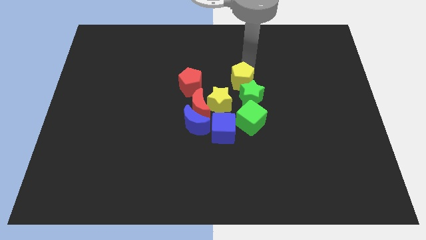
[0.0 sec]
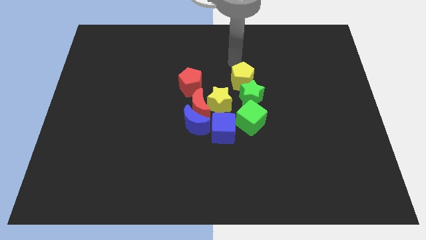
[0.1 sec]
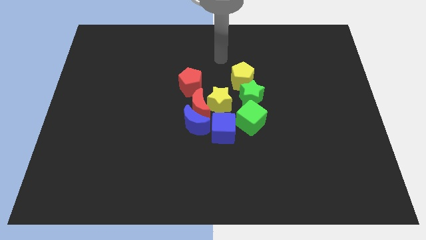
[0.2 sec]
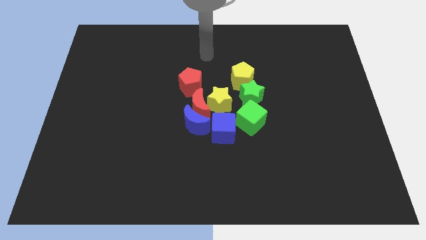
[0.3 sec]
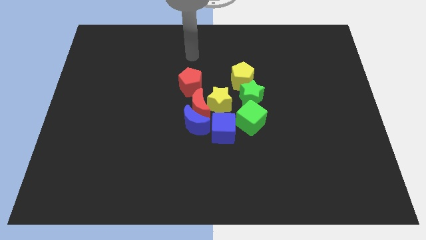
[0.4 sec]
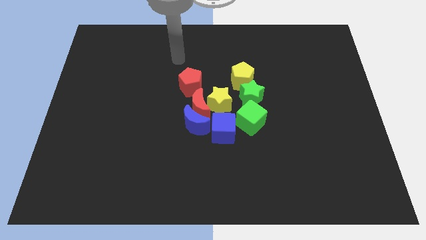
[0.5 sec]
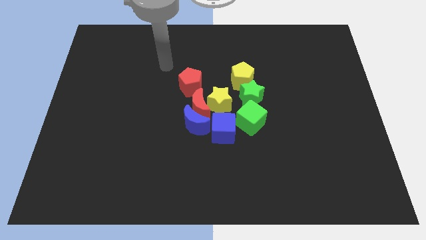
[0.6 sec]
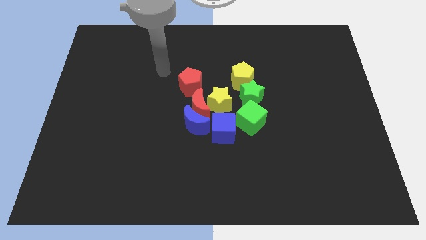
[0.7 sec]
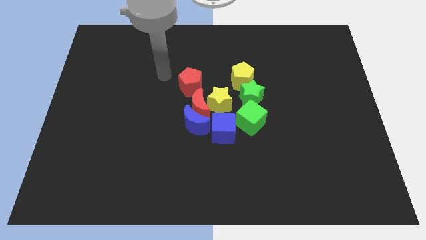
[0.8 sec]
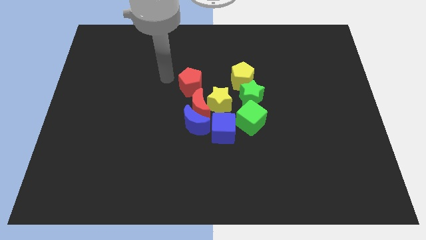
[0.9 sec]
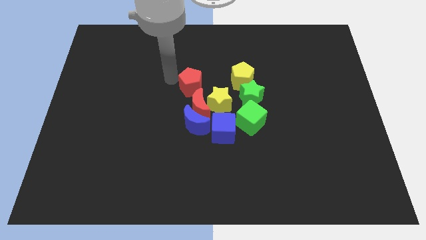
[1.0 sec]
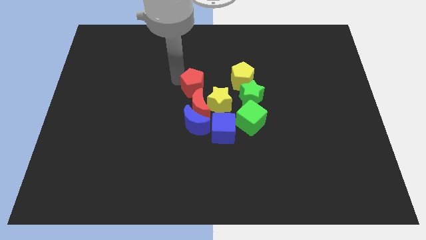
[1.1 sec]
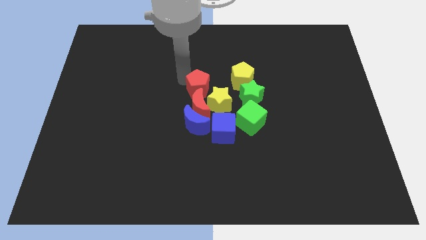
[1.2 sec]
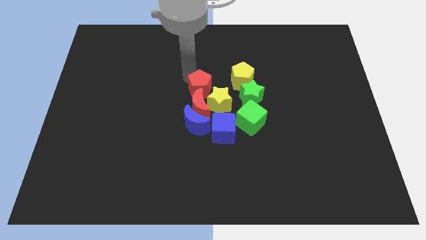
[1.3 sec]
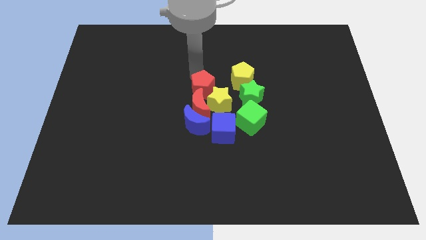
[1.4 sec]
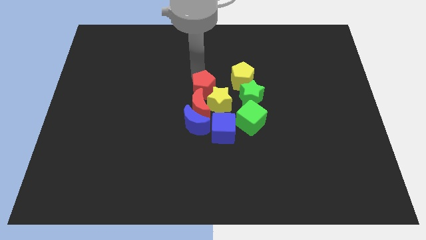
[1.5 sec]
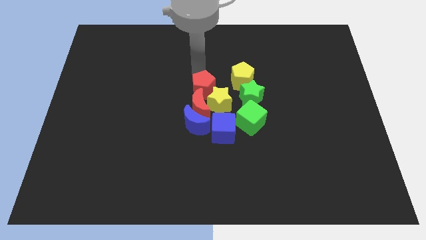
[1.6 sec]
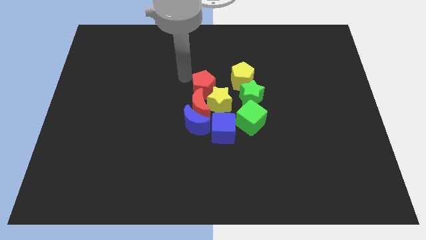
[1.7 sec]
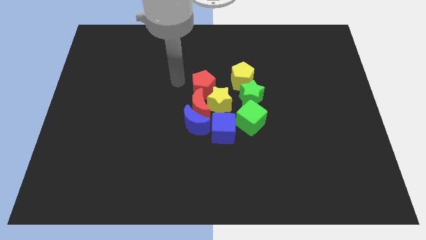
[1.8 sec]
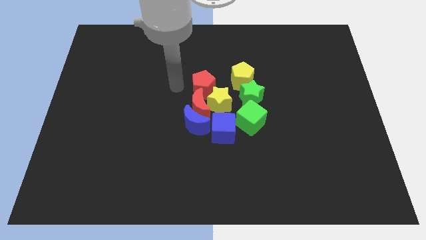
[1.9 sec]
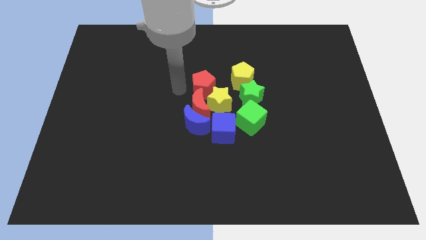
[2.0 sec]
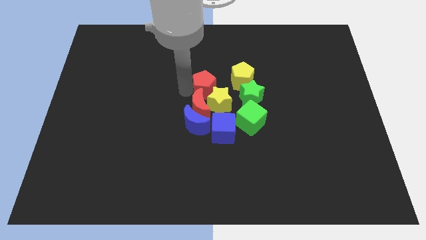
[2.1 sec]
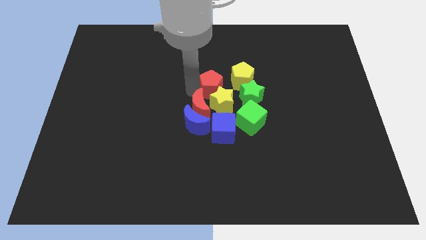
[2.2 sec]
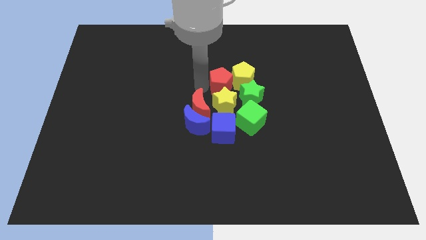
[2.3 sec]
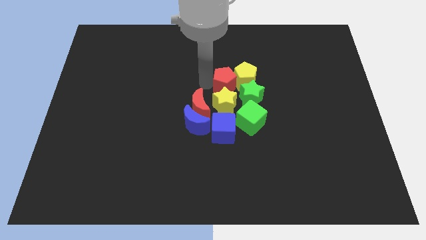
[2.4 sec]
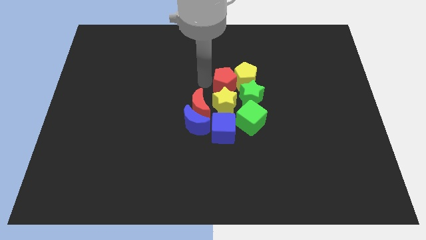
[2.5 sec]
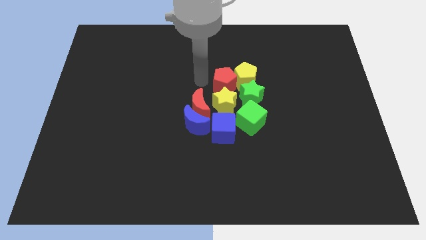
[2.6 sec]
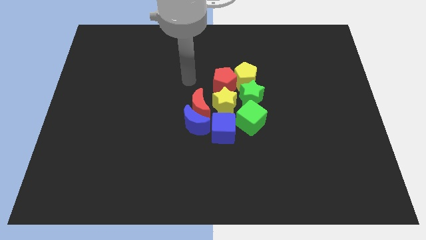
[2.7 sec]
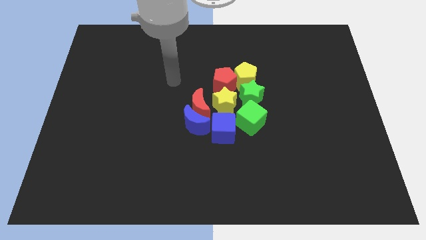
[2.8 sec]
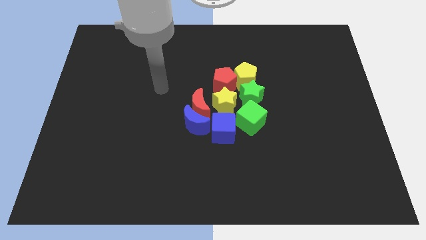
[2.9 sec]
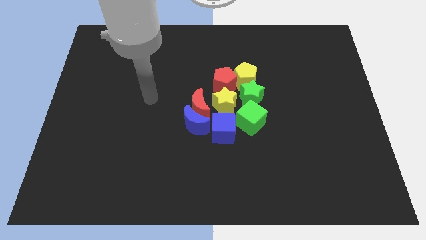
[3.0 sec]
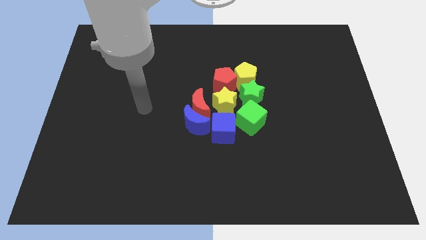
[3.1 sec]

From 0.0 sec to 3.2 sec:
slide the red pentagon into the group of blocks

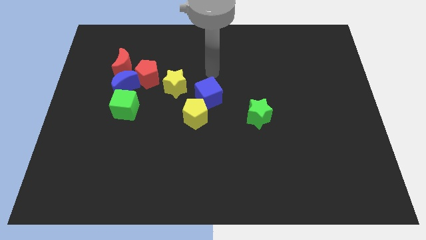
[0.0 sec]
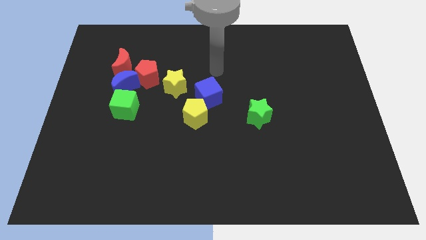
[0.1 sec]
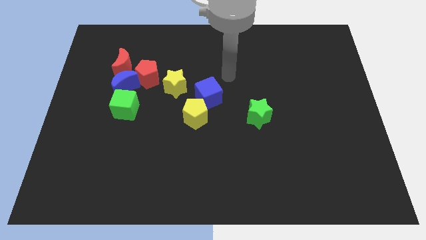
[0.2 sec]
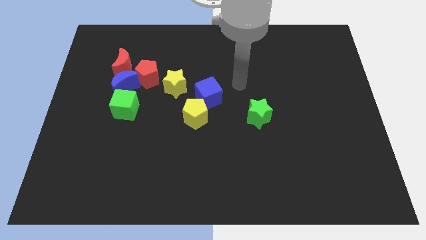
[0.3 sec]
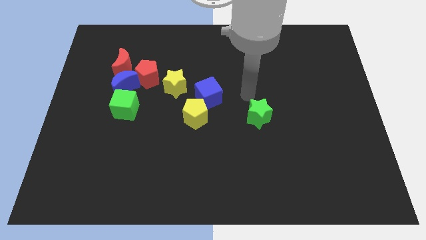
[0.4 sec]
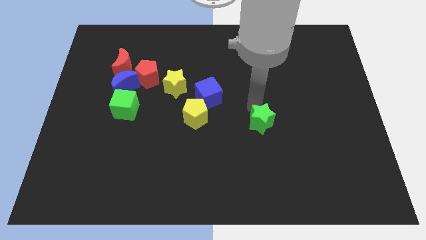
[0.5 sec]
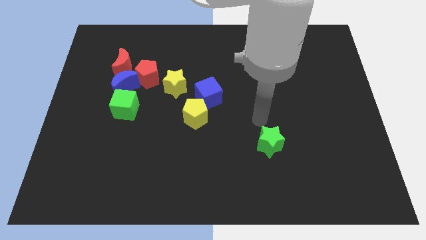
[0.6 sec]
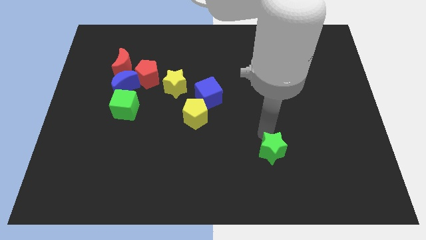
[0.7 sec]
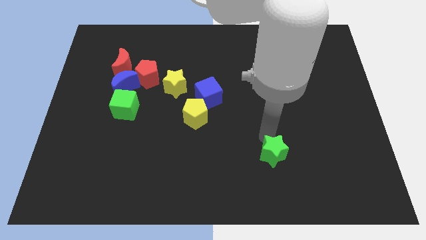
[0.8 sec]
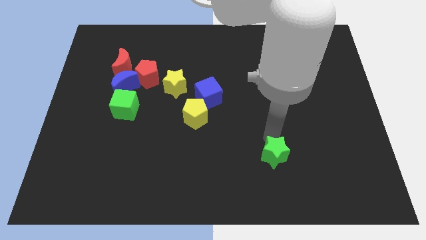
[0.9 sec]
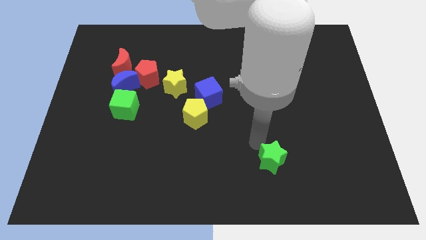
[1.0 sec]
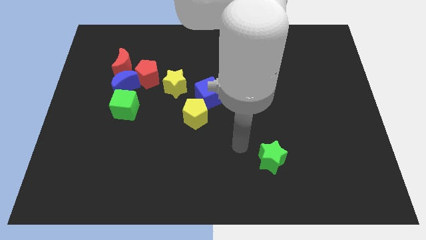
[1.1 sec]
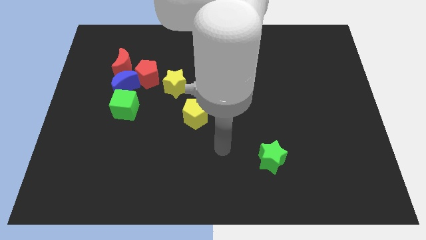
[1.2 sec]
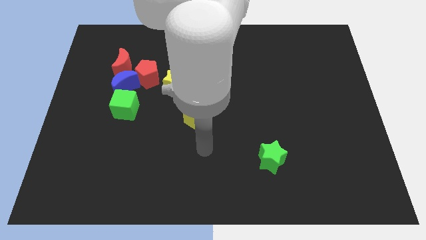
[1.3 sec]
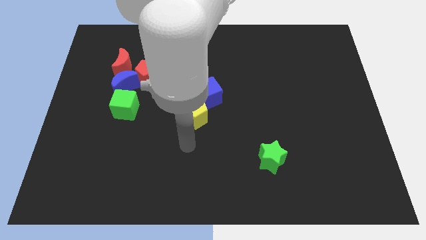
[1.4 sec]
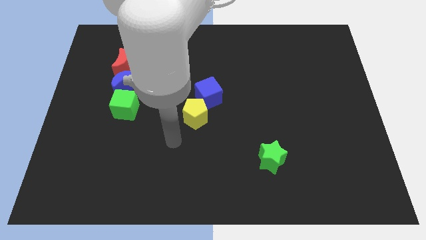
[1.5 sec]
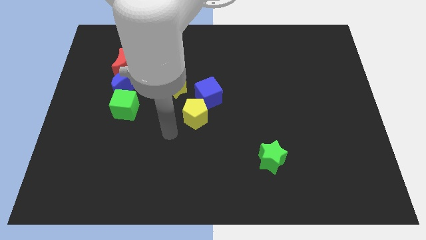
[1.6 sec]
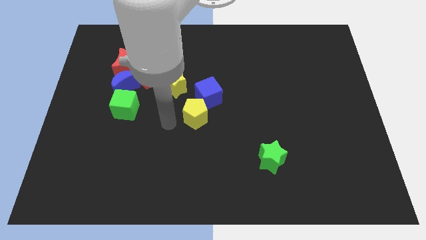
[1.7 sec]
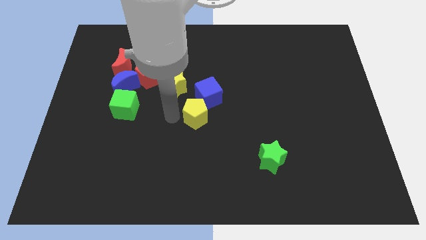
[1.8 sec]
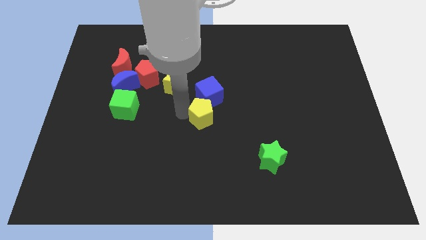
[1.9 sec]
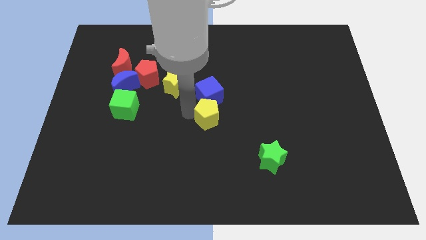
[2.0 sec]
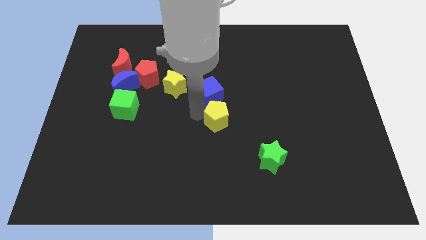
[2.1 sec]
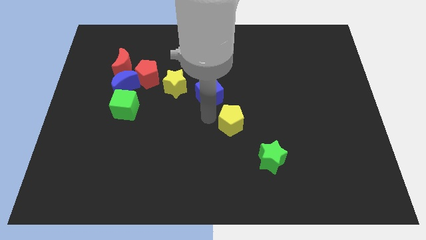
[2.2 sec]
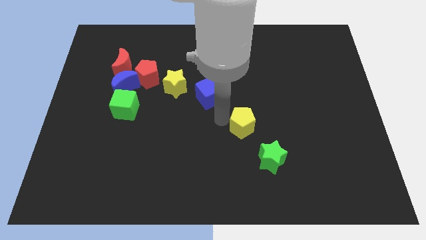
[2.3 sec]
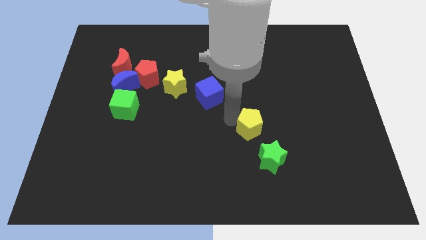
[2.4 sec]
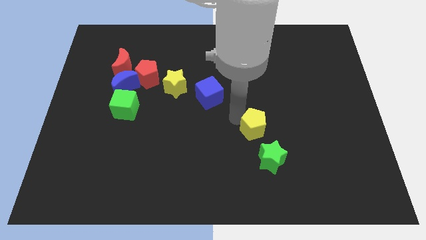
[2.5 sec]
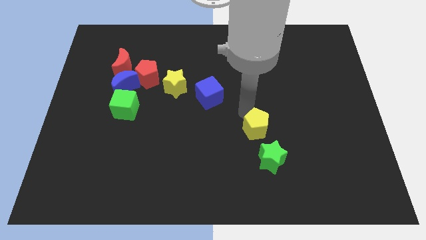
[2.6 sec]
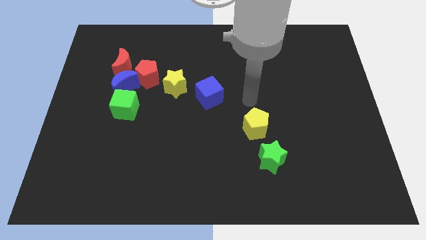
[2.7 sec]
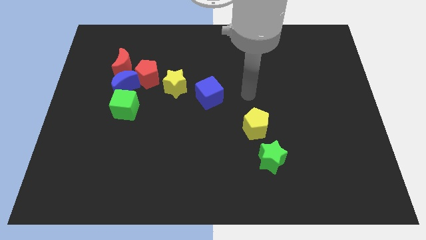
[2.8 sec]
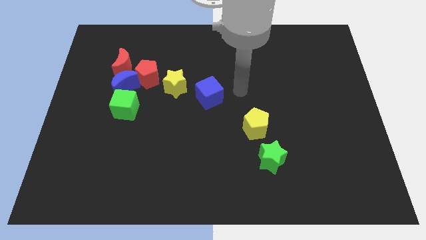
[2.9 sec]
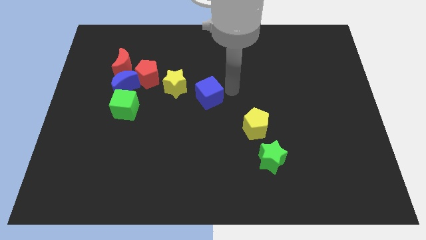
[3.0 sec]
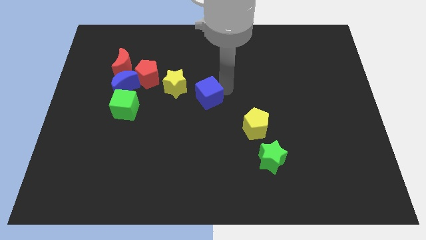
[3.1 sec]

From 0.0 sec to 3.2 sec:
push the green star downwards

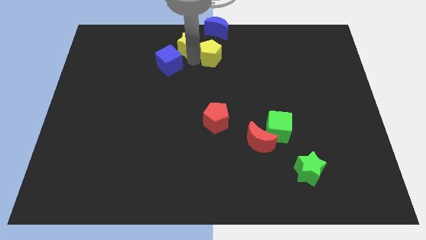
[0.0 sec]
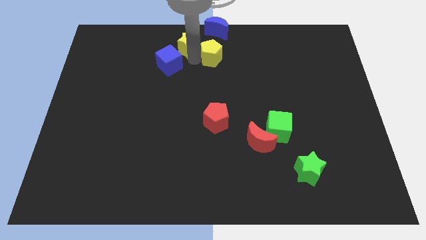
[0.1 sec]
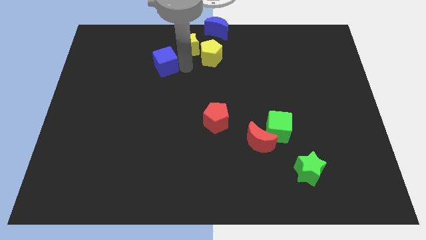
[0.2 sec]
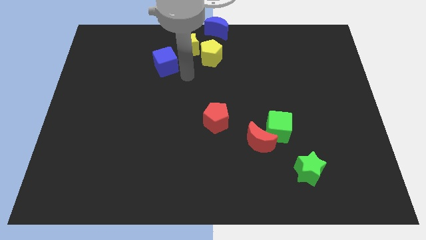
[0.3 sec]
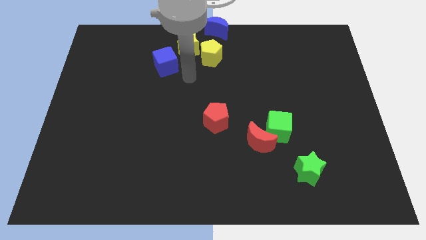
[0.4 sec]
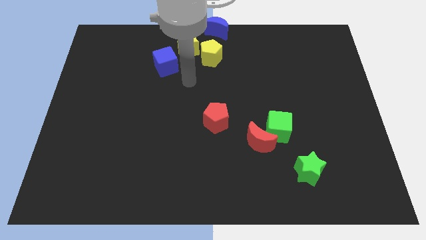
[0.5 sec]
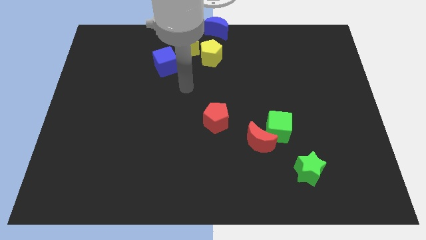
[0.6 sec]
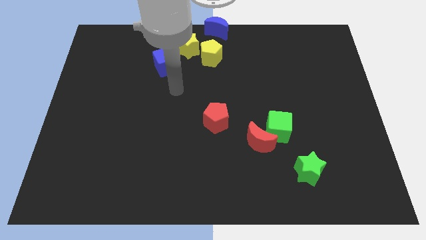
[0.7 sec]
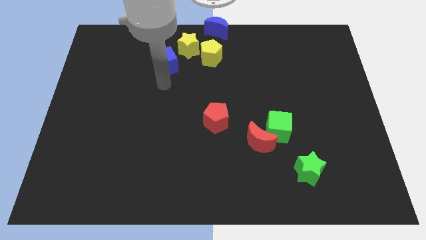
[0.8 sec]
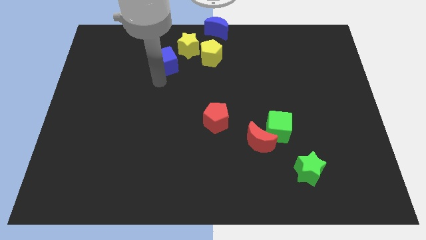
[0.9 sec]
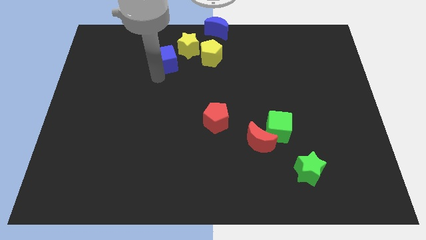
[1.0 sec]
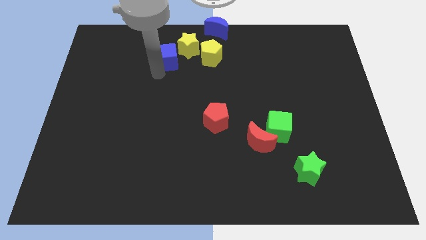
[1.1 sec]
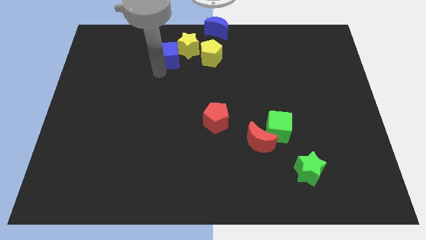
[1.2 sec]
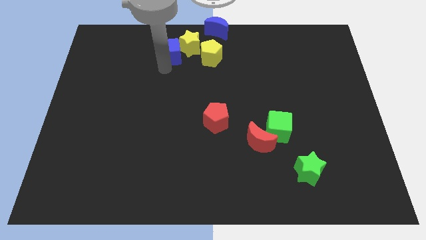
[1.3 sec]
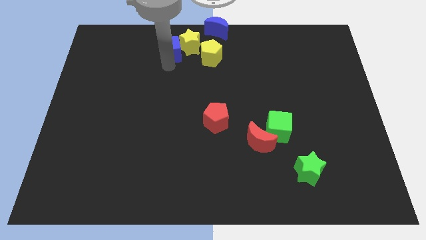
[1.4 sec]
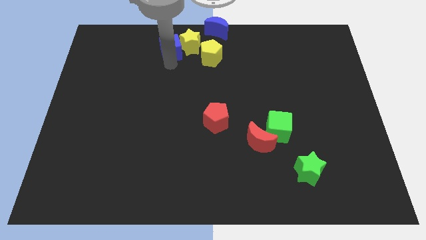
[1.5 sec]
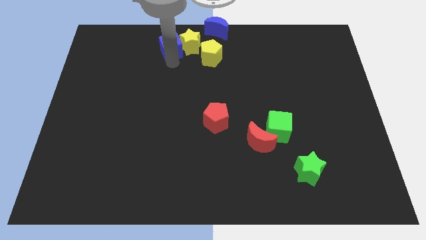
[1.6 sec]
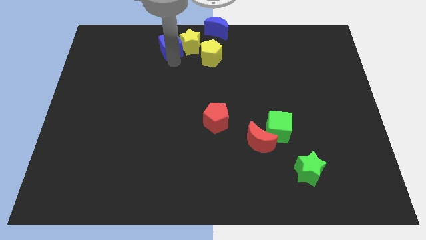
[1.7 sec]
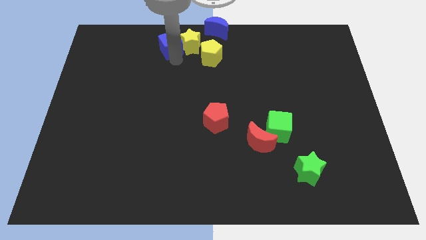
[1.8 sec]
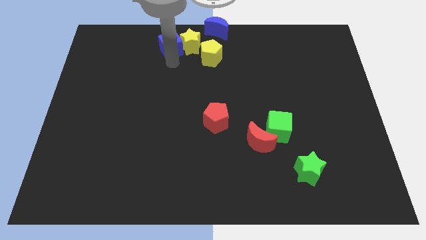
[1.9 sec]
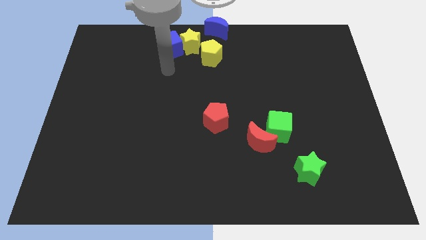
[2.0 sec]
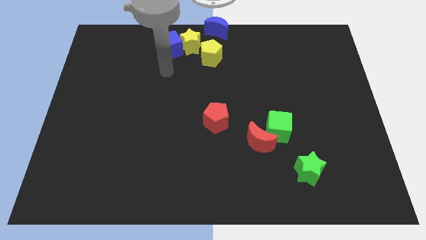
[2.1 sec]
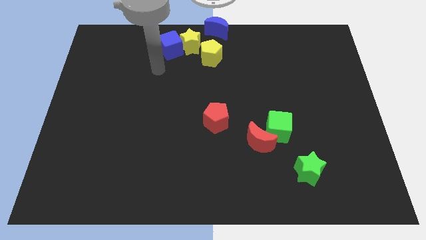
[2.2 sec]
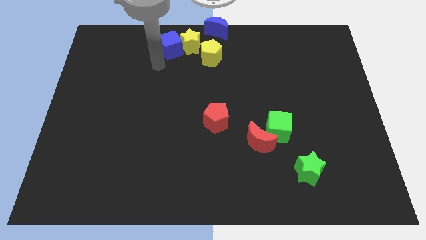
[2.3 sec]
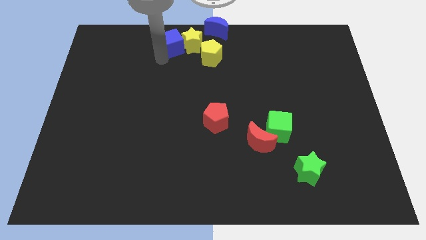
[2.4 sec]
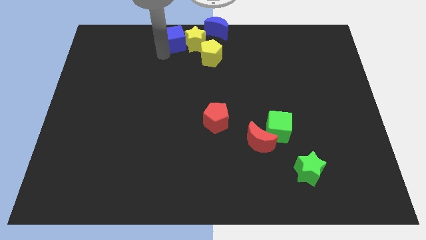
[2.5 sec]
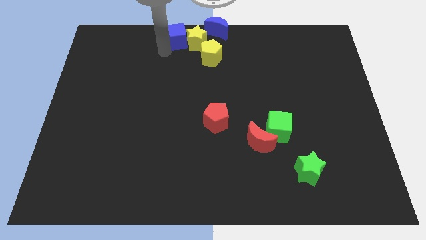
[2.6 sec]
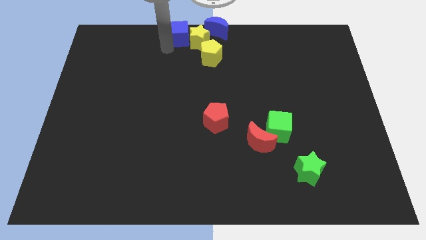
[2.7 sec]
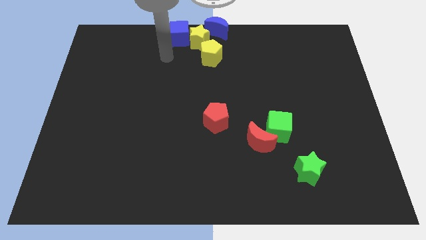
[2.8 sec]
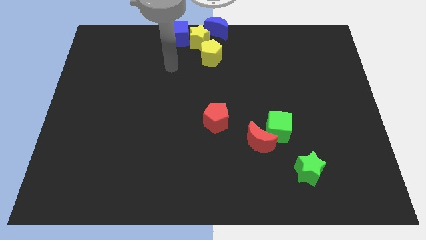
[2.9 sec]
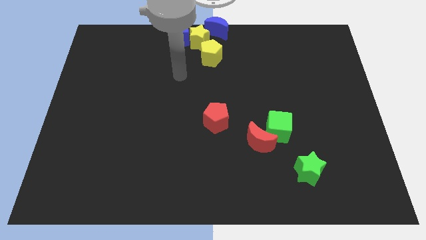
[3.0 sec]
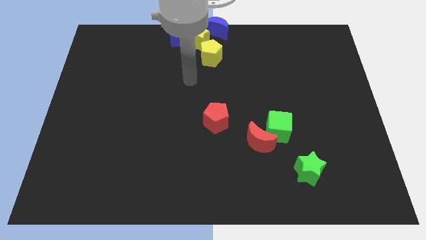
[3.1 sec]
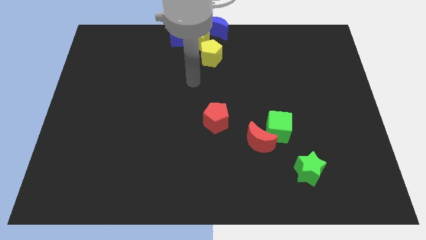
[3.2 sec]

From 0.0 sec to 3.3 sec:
arrange the yellow and blue blocks at the top center of the board
